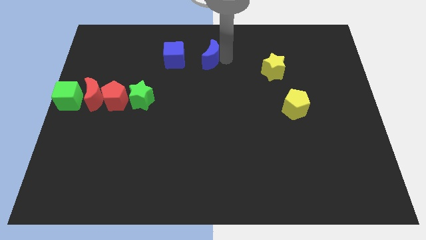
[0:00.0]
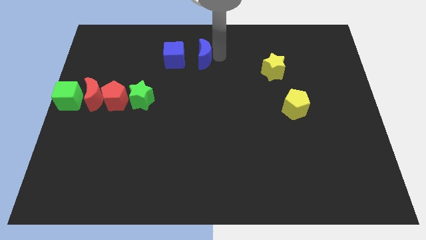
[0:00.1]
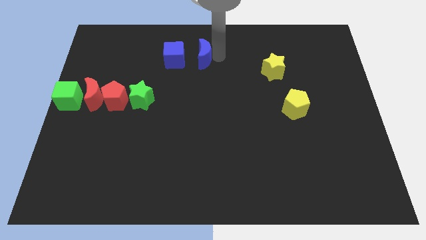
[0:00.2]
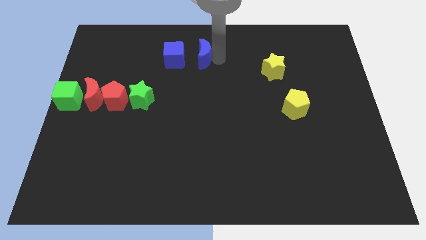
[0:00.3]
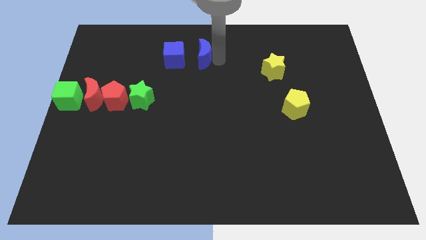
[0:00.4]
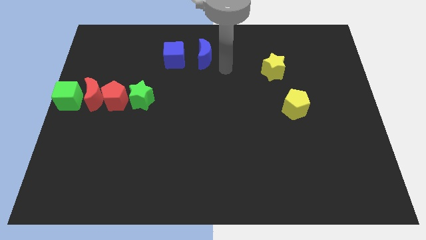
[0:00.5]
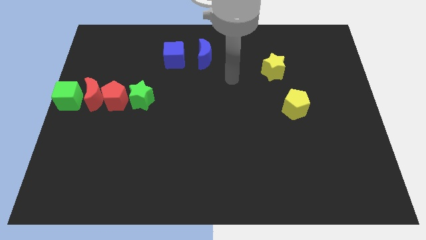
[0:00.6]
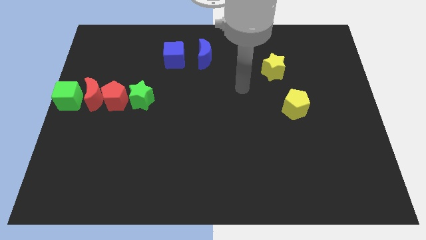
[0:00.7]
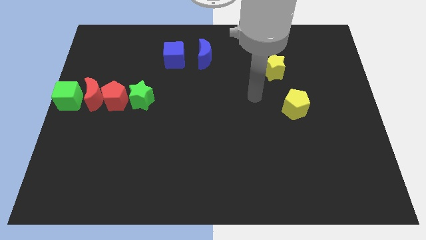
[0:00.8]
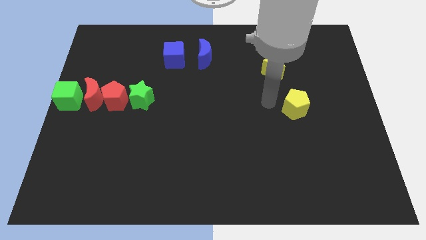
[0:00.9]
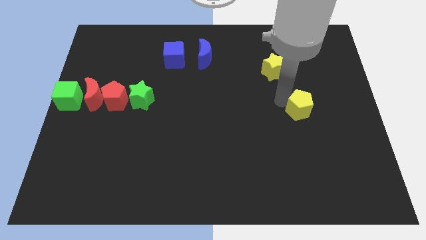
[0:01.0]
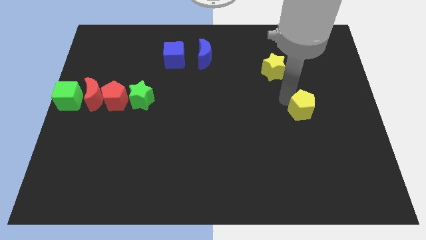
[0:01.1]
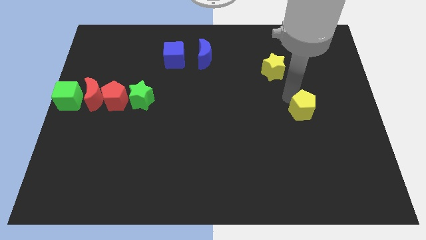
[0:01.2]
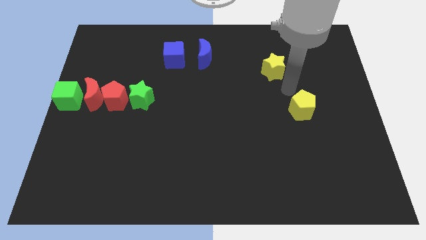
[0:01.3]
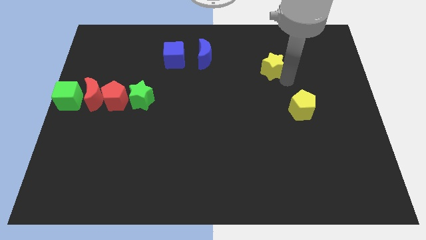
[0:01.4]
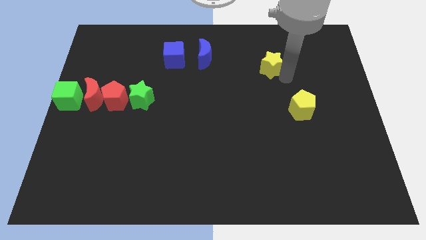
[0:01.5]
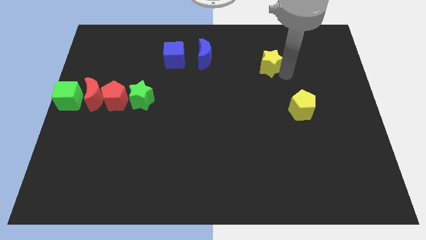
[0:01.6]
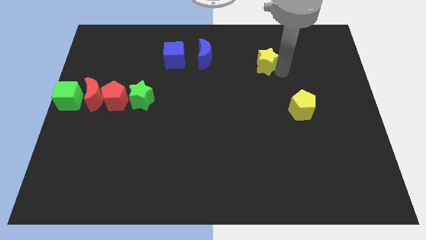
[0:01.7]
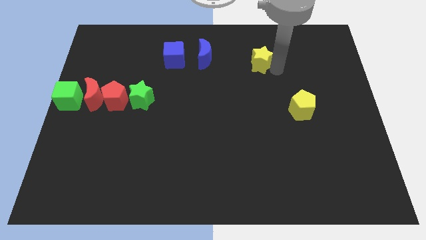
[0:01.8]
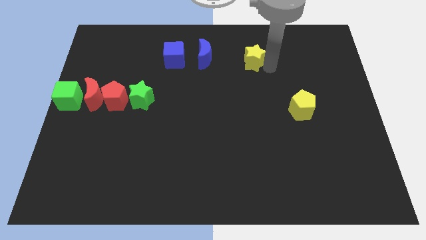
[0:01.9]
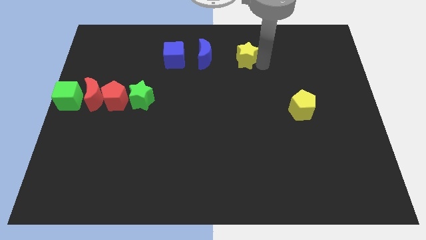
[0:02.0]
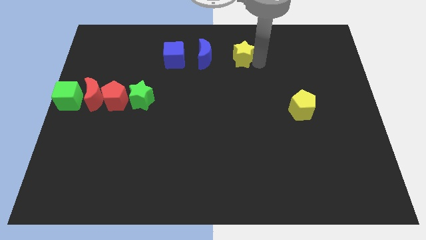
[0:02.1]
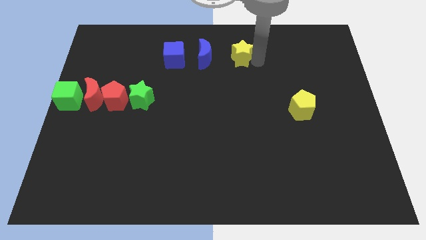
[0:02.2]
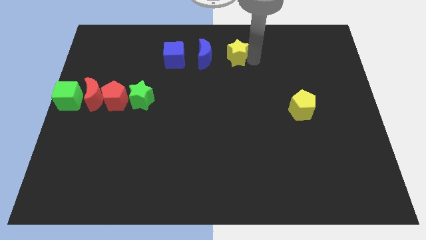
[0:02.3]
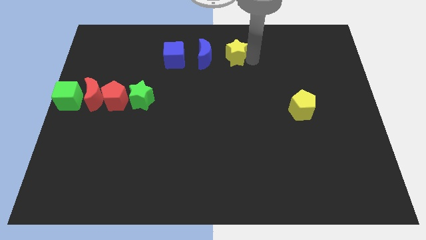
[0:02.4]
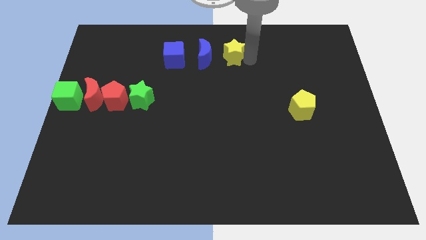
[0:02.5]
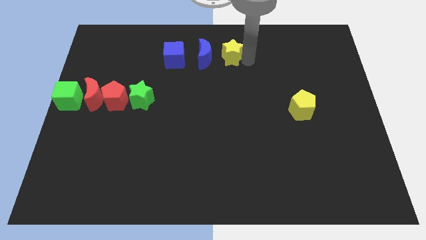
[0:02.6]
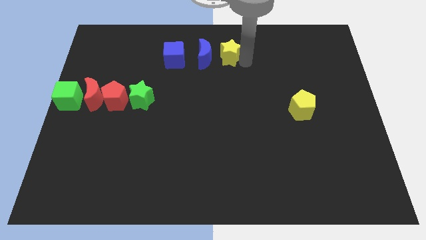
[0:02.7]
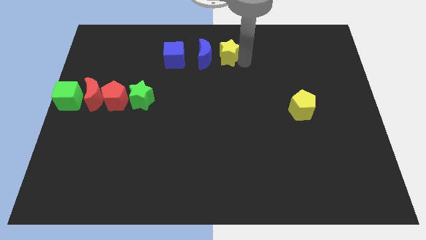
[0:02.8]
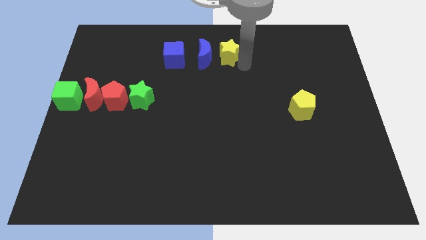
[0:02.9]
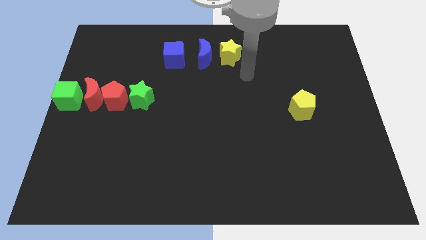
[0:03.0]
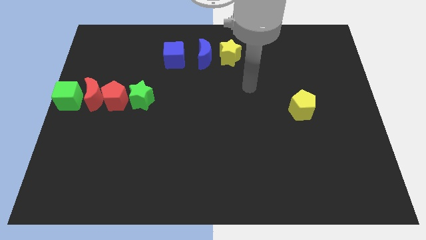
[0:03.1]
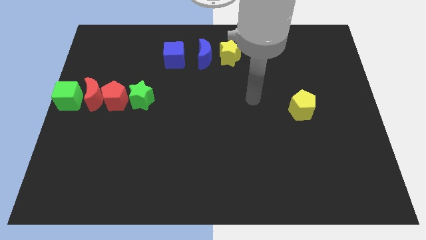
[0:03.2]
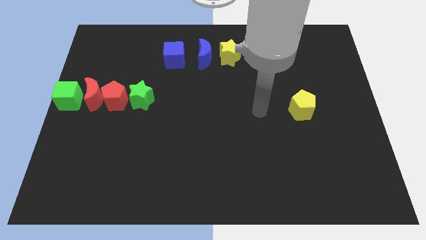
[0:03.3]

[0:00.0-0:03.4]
move the yellow star right beside the blue crescent

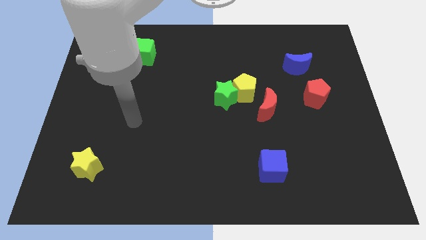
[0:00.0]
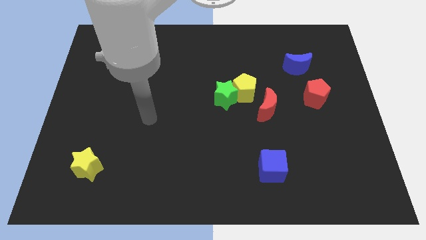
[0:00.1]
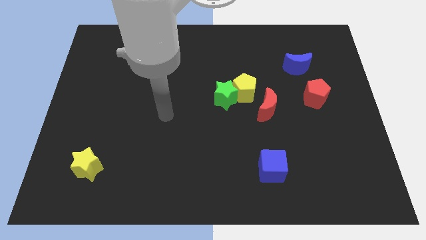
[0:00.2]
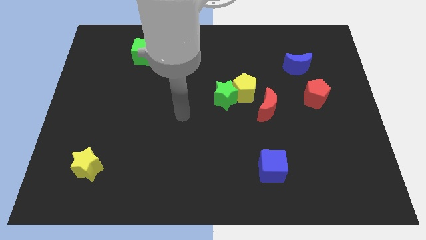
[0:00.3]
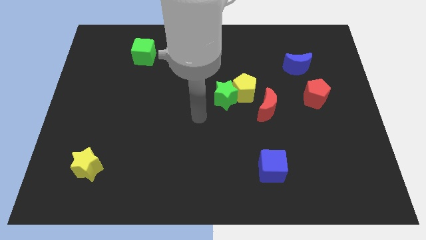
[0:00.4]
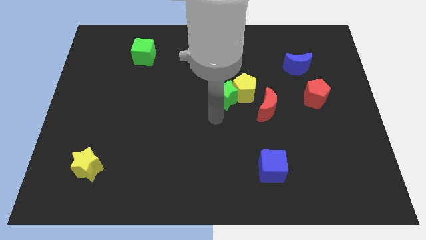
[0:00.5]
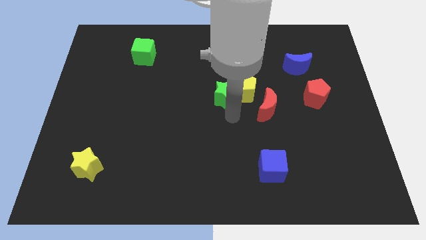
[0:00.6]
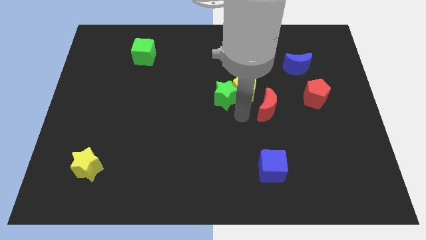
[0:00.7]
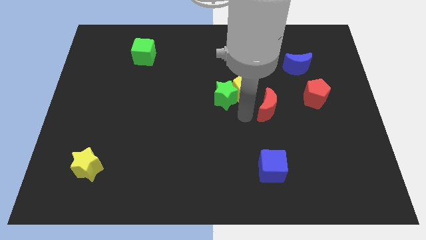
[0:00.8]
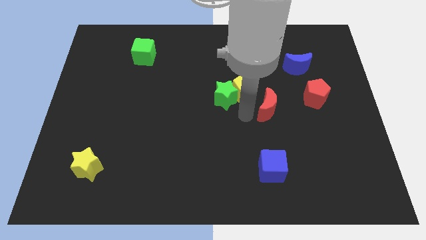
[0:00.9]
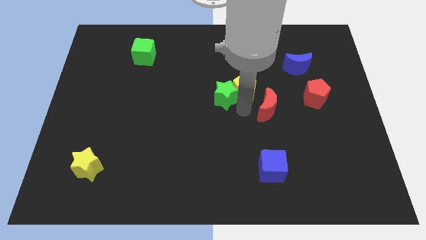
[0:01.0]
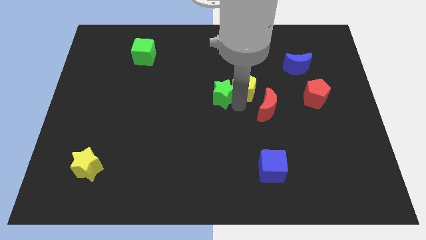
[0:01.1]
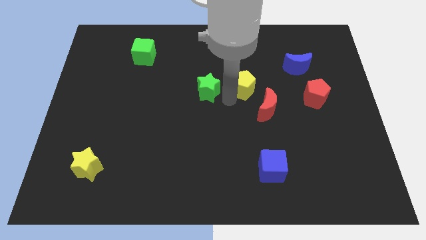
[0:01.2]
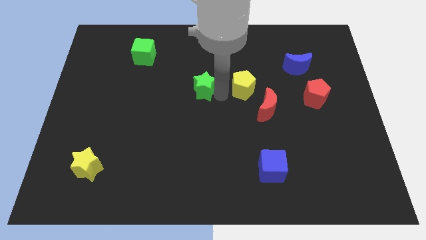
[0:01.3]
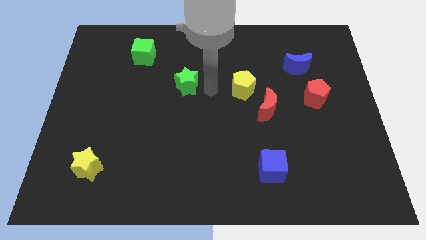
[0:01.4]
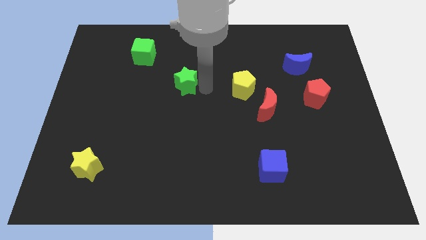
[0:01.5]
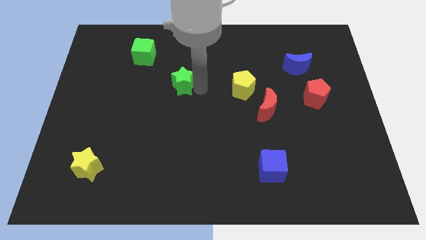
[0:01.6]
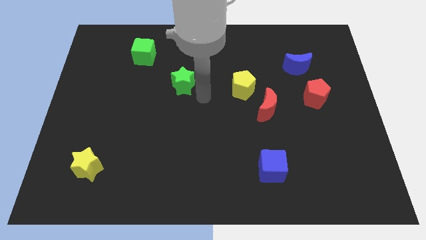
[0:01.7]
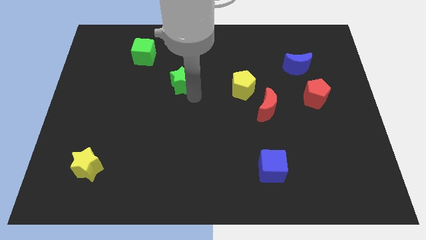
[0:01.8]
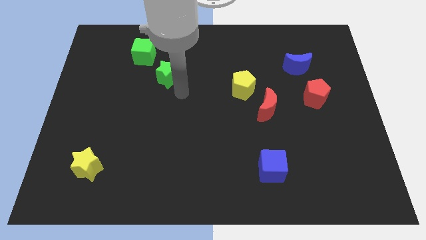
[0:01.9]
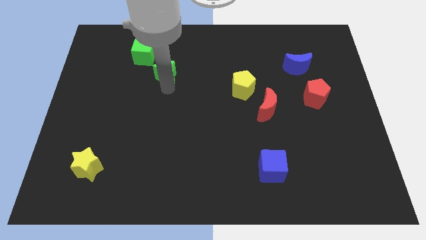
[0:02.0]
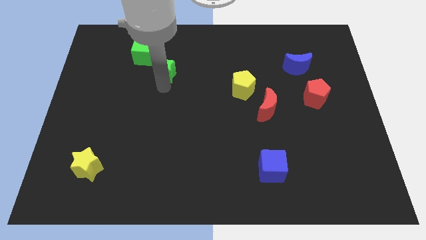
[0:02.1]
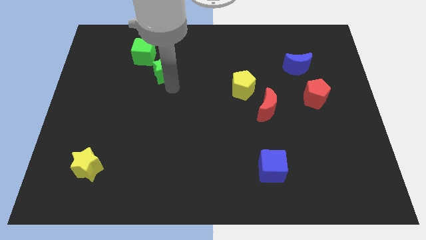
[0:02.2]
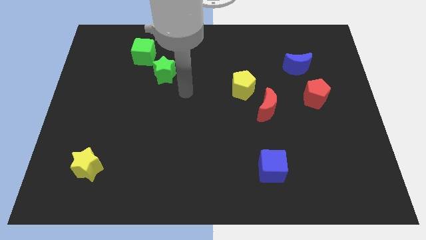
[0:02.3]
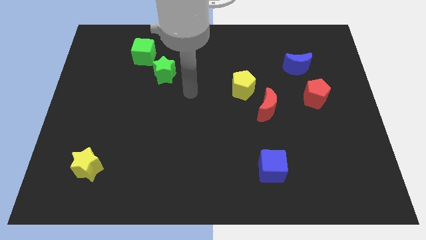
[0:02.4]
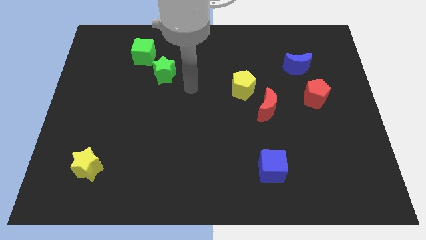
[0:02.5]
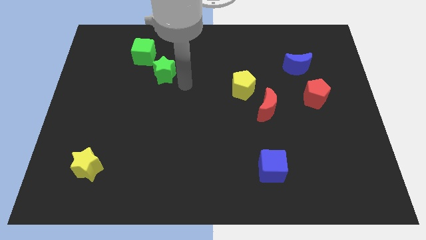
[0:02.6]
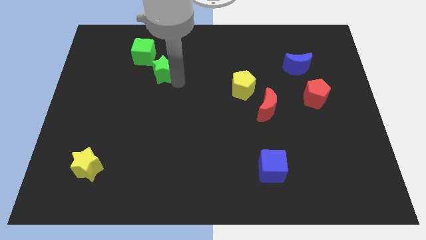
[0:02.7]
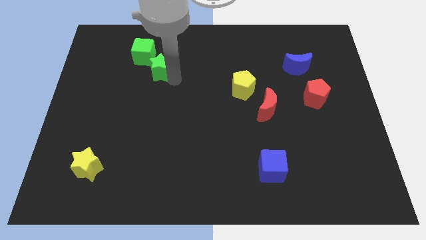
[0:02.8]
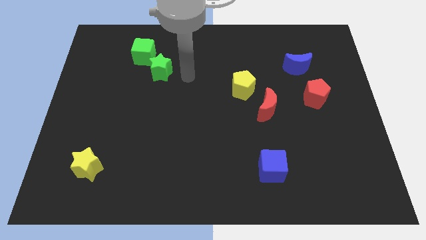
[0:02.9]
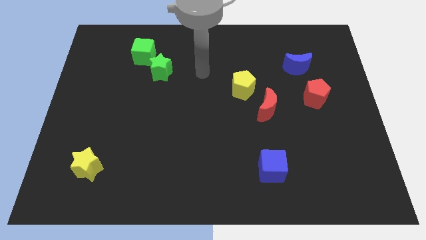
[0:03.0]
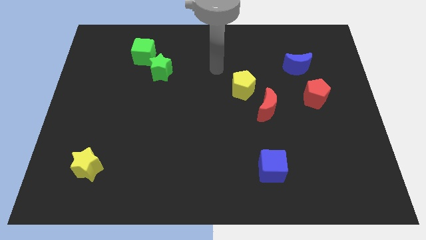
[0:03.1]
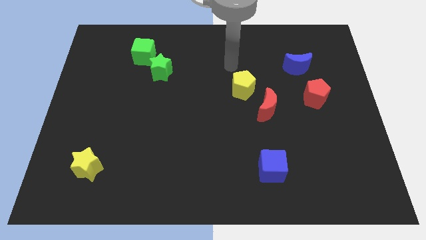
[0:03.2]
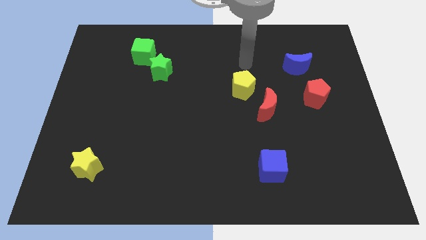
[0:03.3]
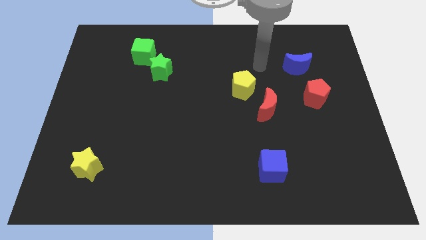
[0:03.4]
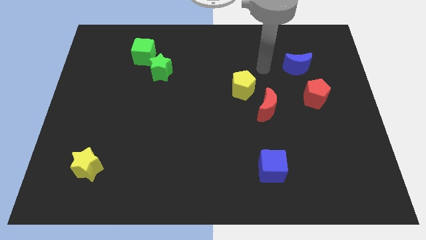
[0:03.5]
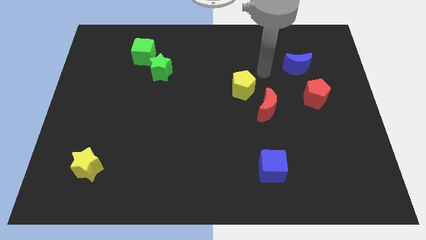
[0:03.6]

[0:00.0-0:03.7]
separate the green star from the yellow pentagon

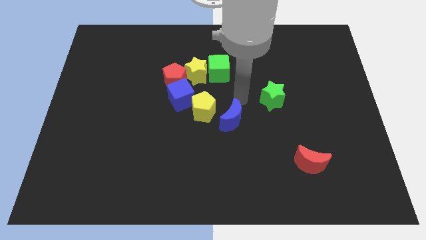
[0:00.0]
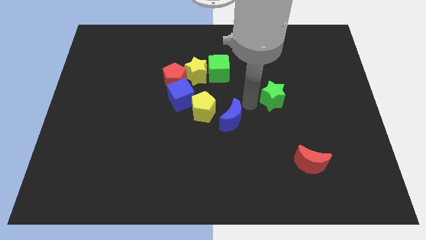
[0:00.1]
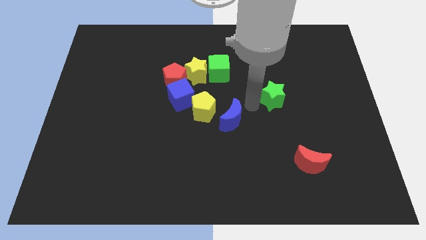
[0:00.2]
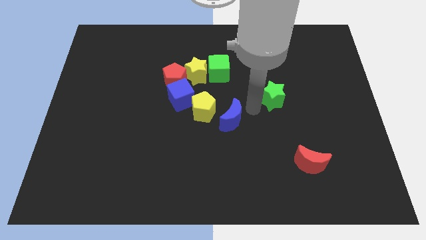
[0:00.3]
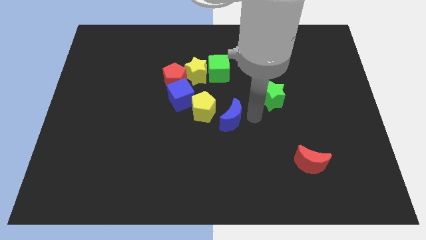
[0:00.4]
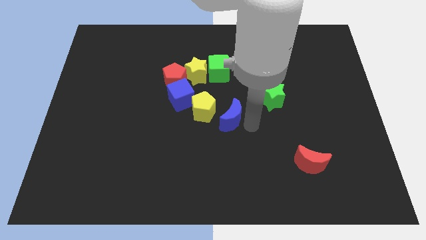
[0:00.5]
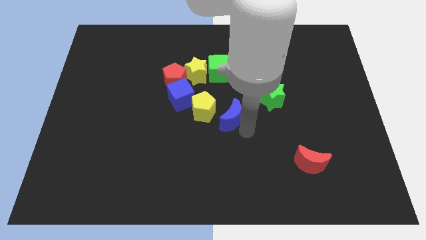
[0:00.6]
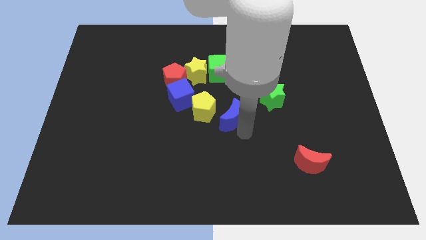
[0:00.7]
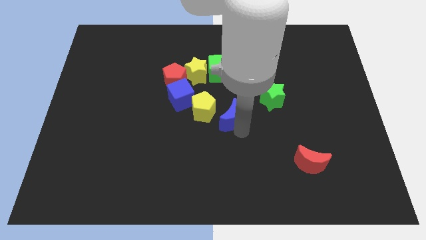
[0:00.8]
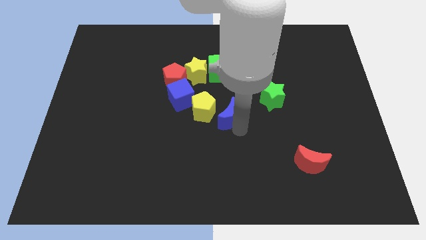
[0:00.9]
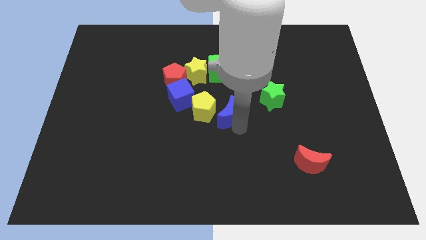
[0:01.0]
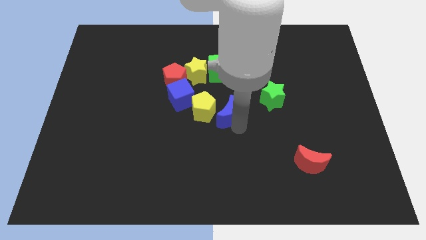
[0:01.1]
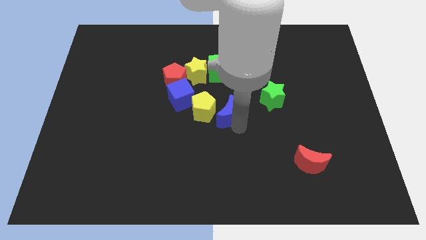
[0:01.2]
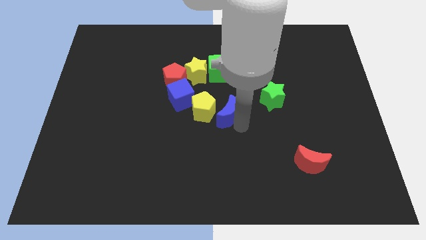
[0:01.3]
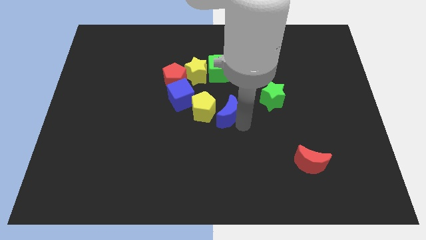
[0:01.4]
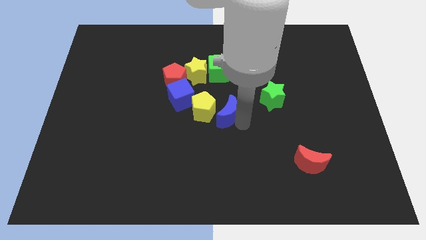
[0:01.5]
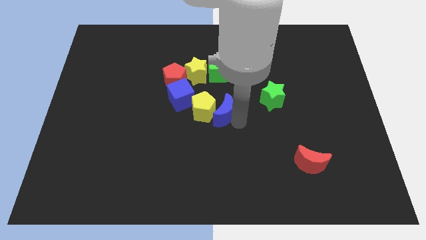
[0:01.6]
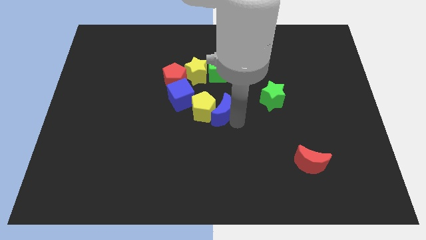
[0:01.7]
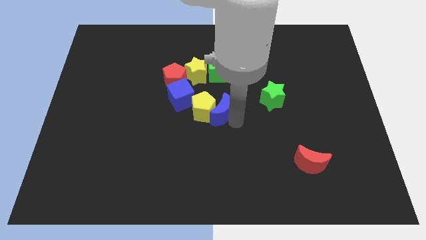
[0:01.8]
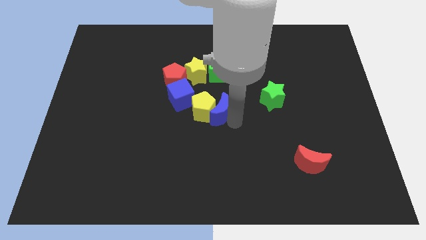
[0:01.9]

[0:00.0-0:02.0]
move the blue moon into the yellow pentagon
